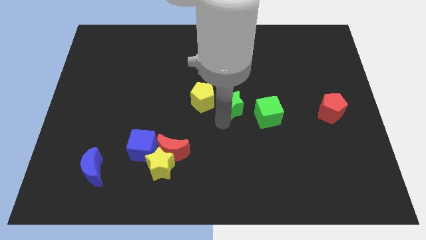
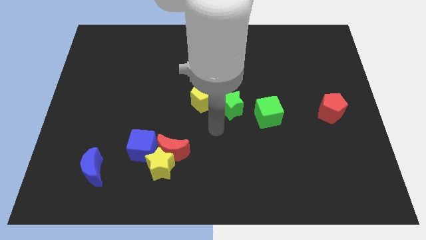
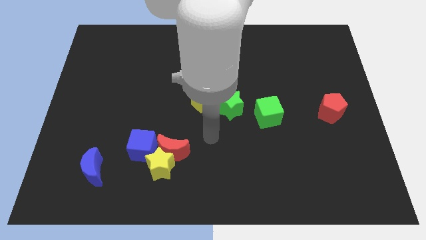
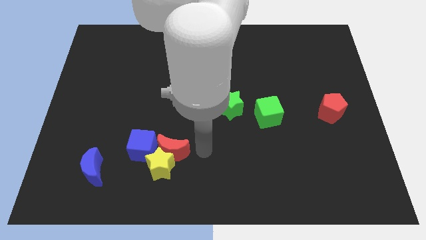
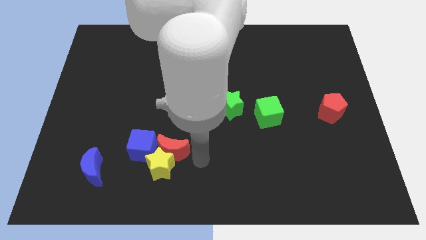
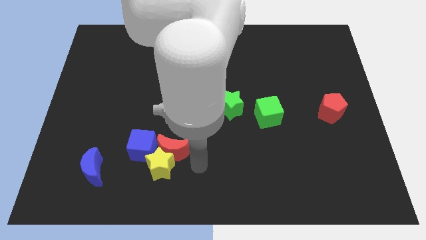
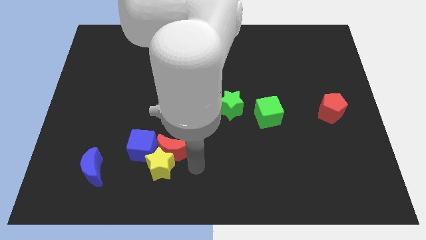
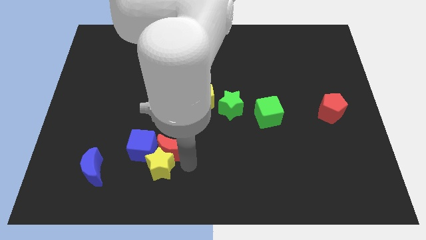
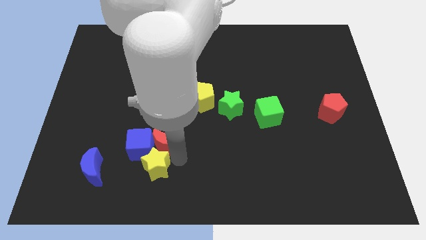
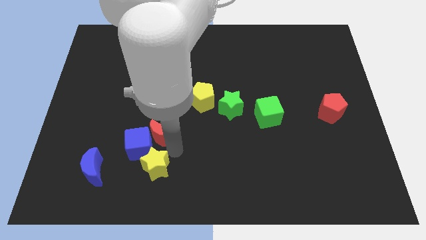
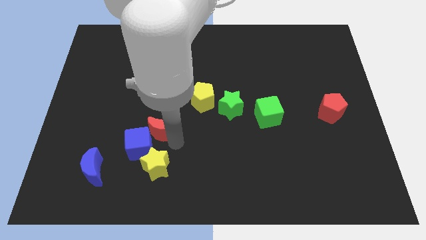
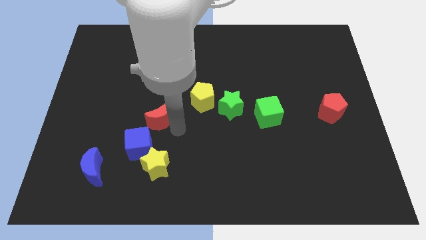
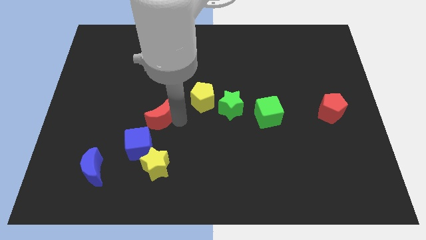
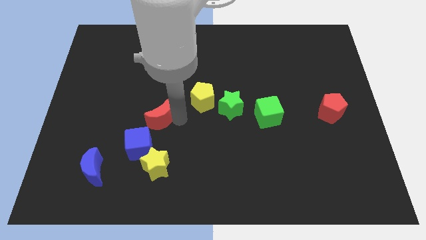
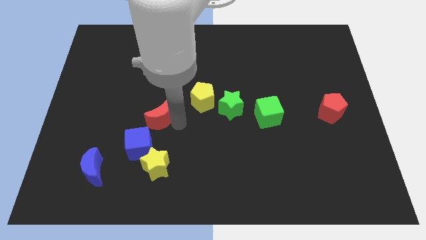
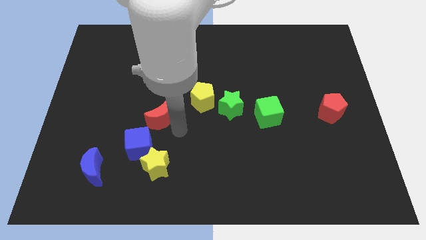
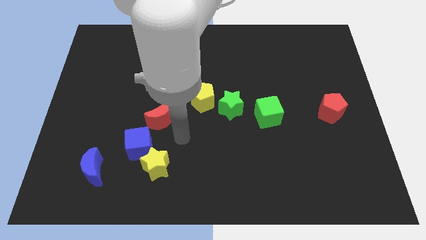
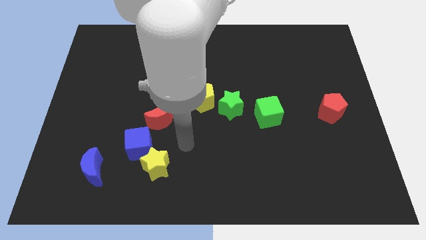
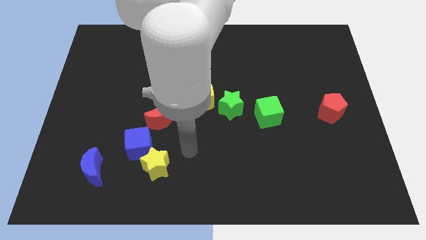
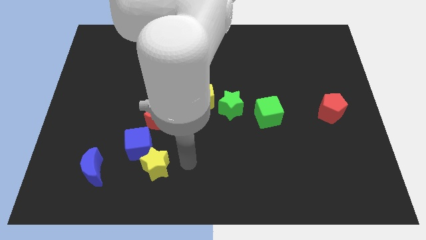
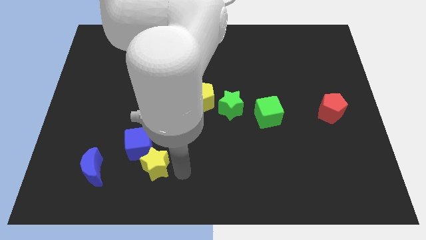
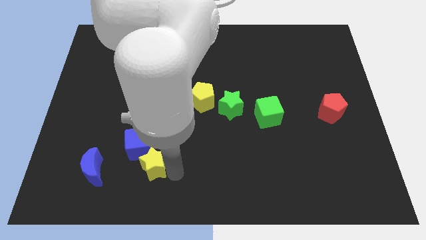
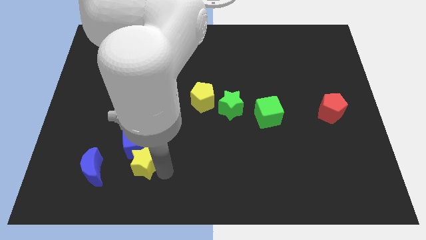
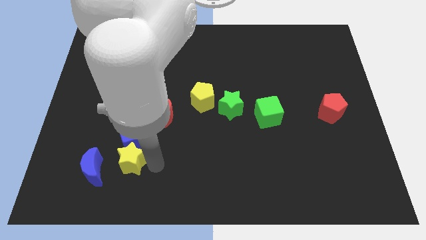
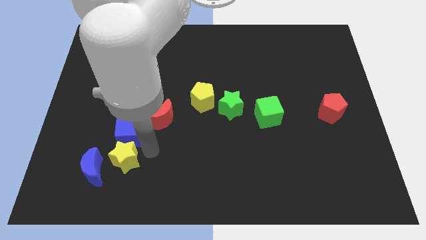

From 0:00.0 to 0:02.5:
move the red moon slightly to the top of the board

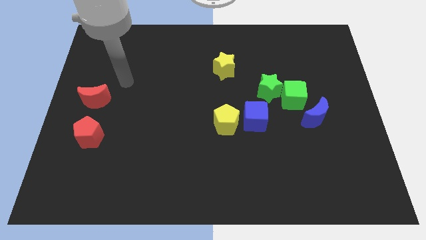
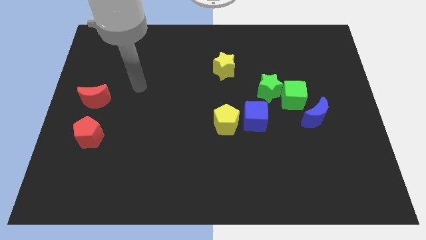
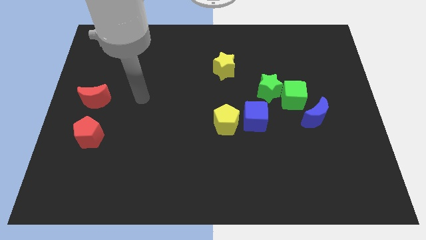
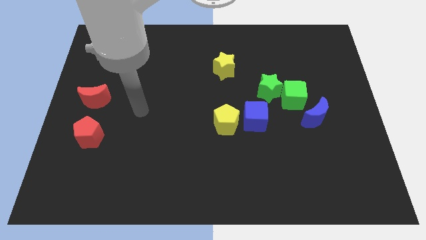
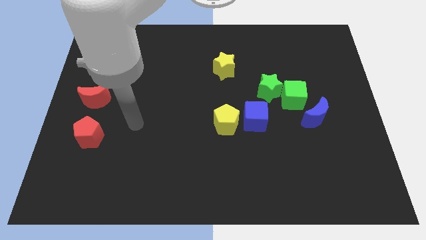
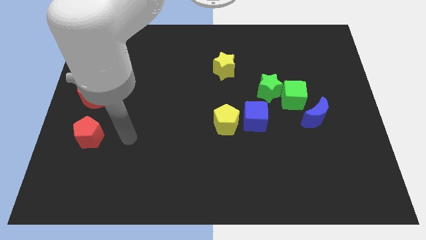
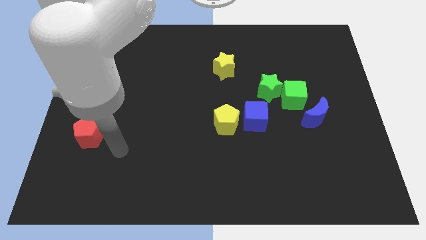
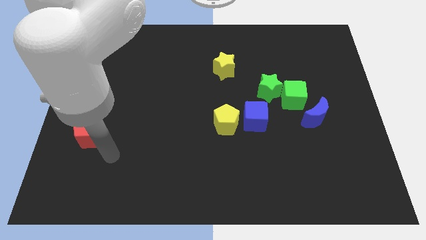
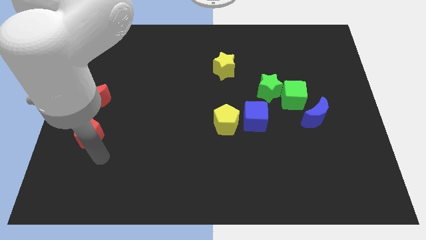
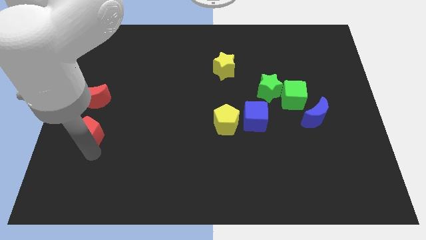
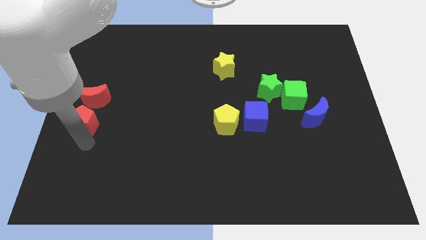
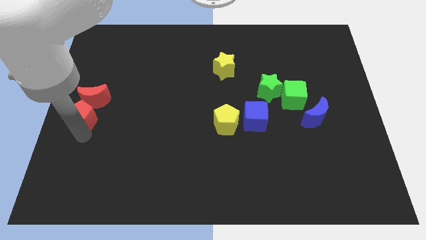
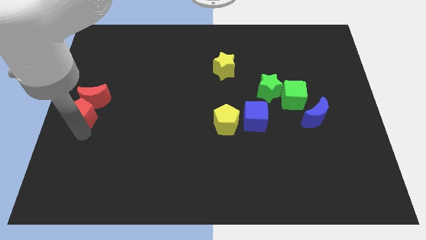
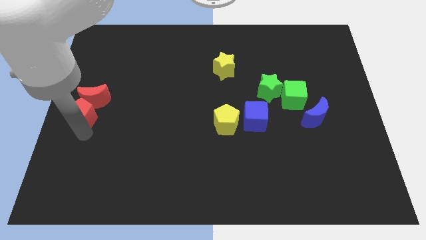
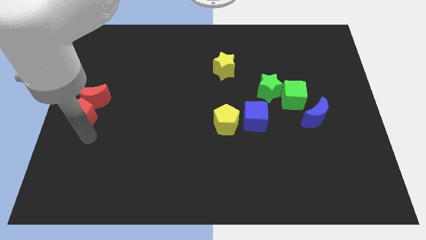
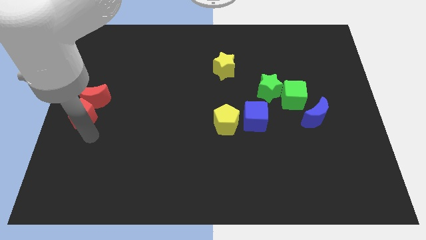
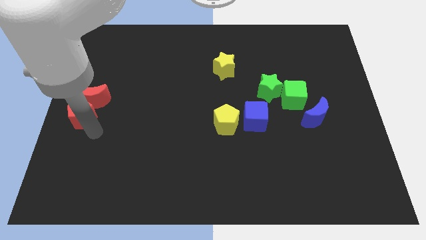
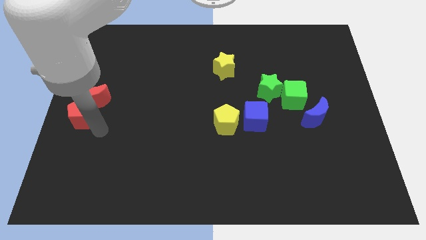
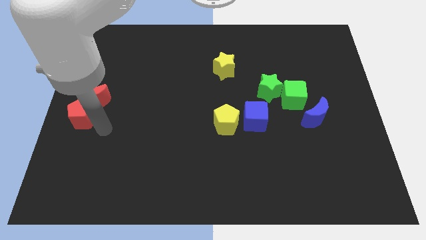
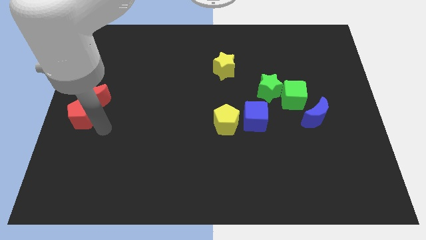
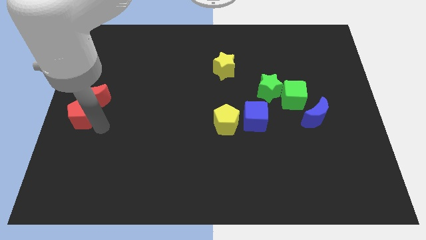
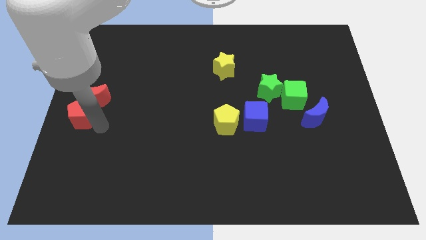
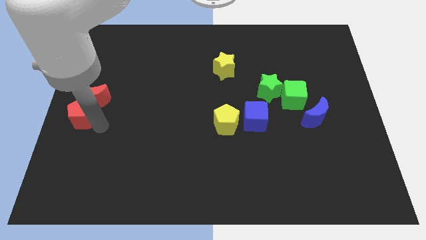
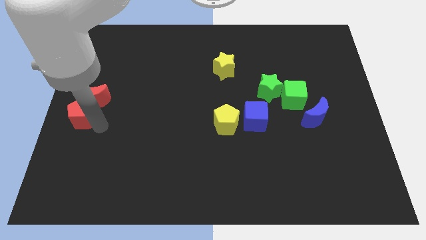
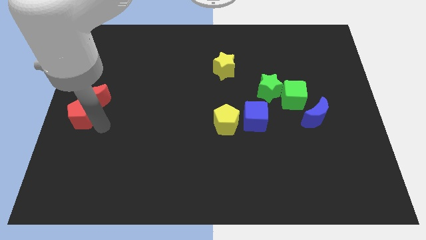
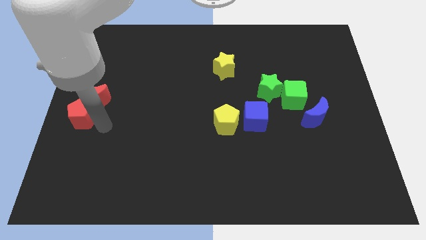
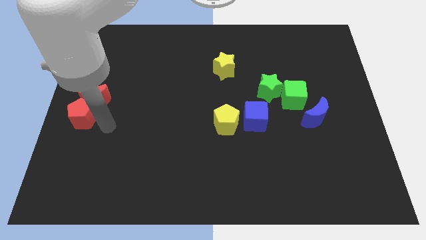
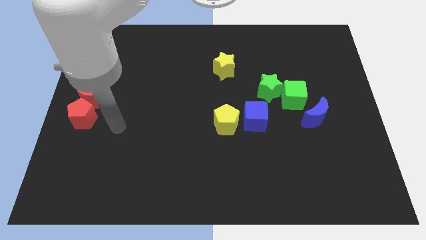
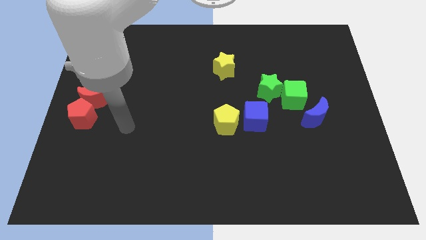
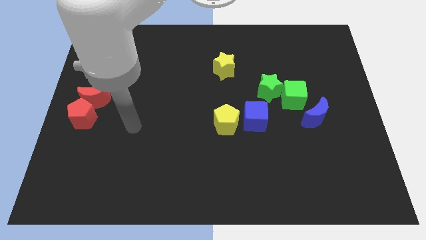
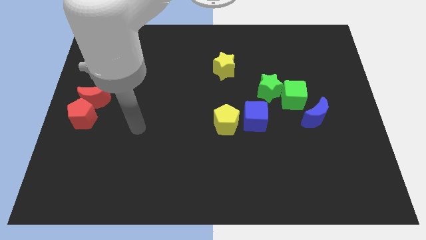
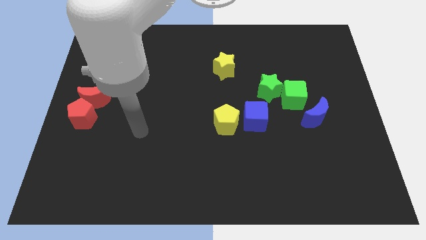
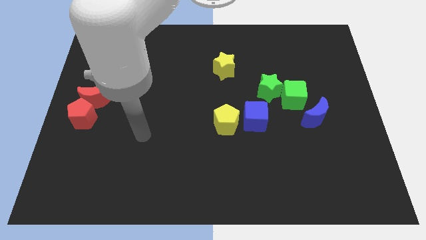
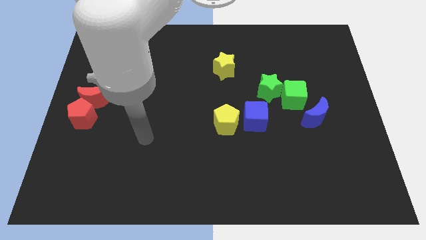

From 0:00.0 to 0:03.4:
move the red pentagon below the red crescent

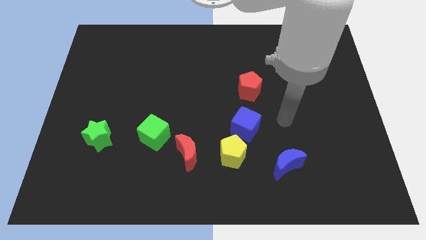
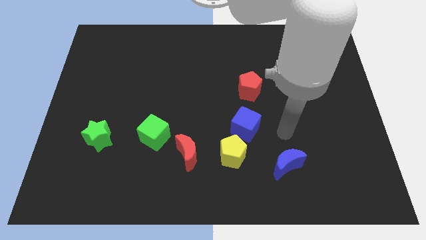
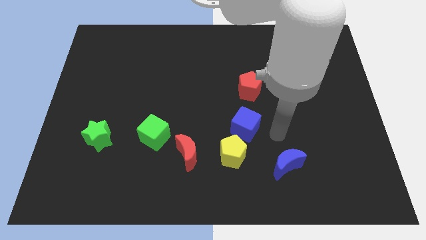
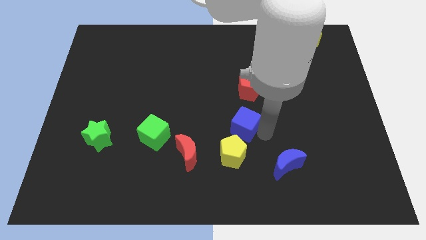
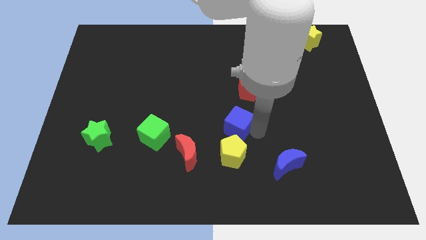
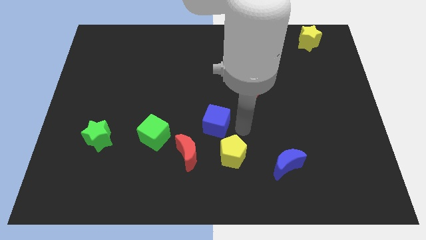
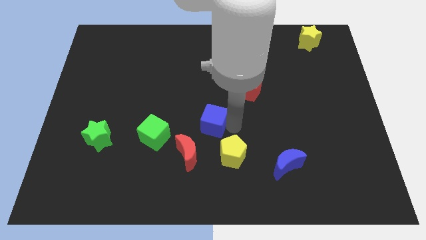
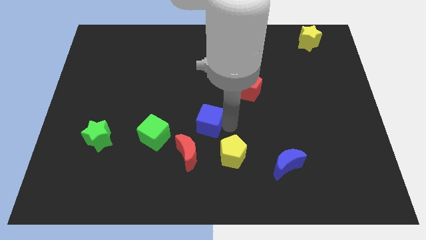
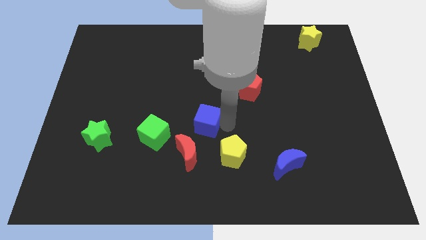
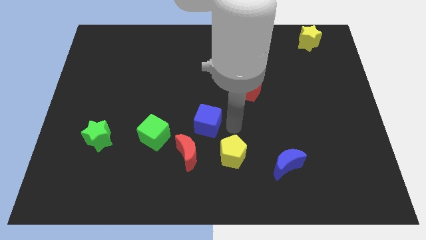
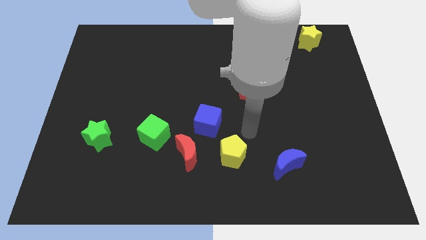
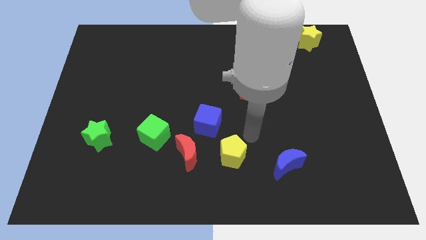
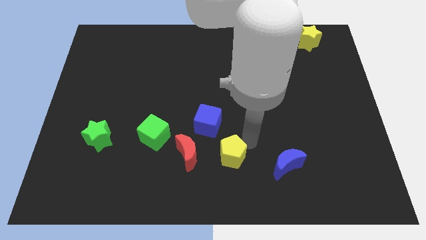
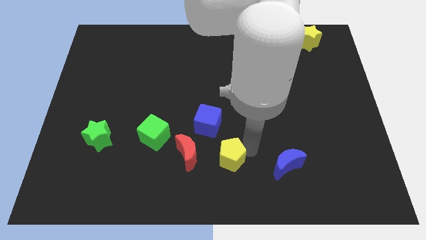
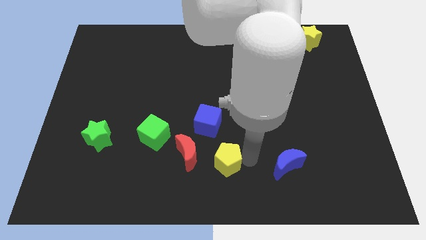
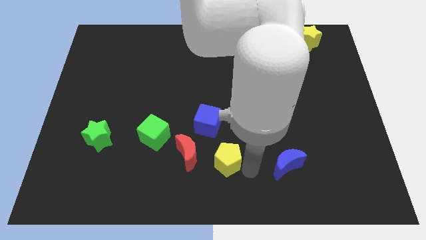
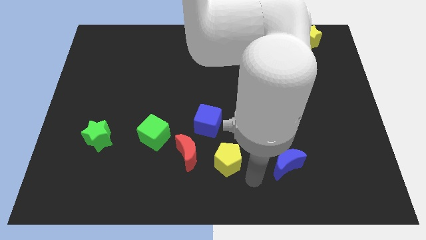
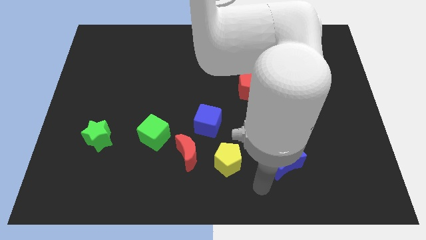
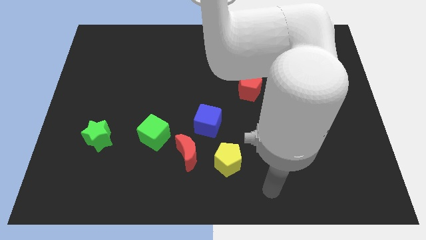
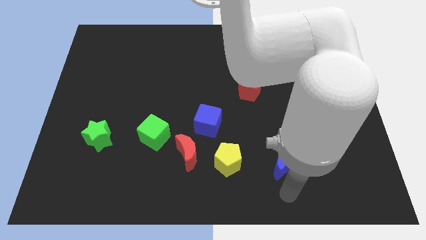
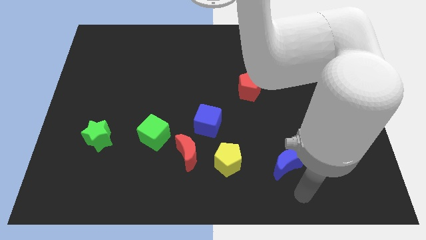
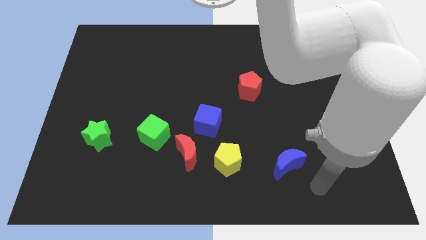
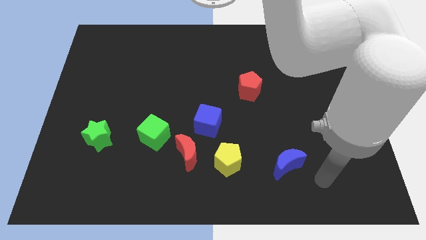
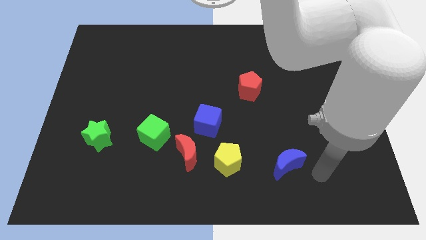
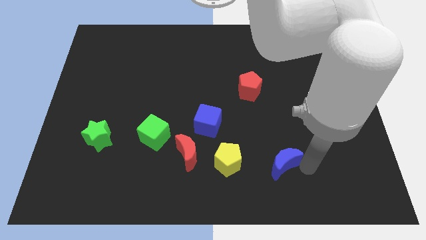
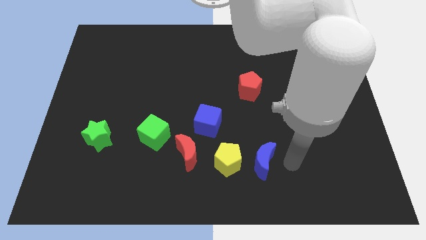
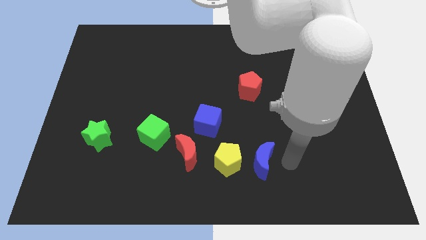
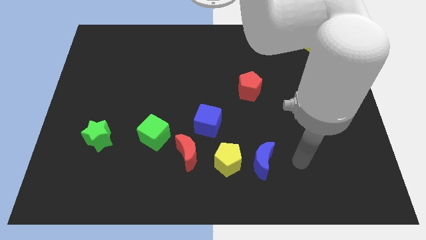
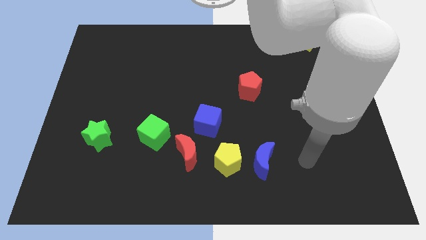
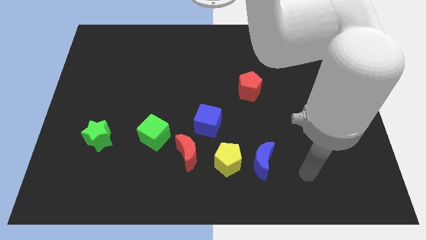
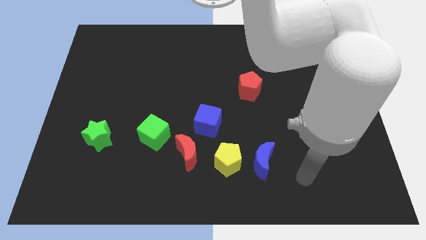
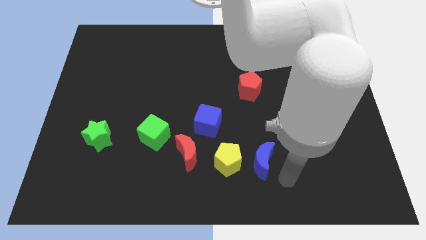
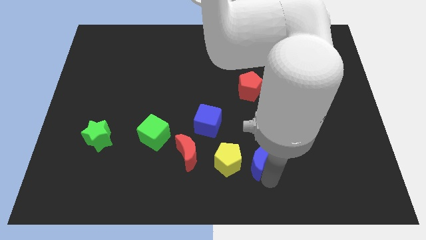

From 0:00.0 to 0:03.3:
push the blue cube and blue crescent slightly to the left side of the board
